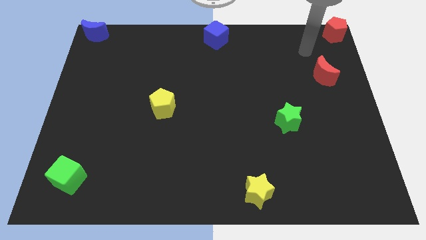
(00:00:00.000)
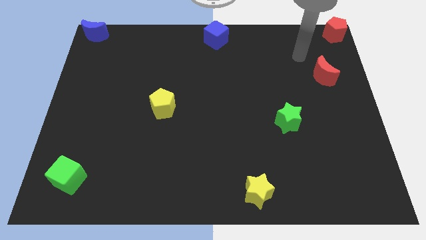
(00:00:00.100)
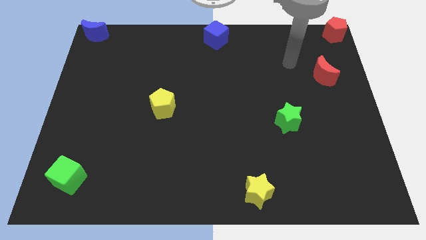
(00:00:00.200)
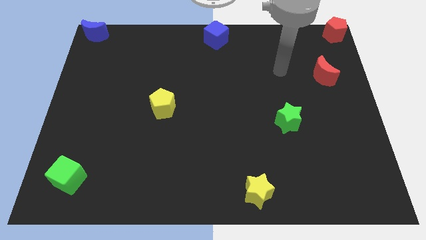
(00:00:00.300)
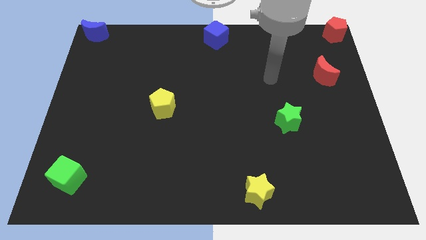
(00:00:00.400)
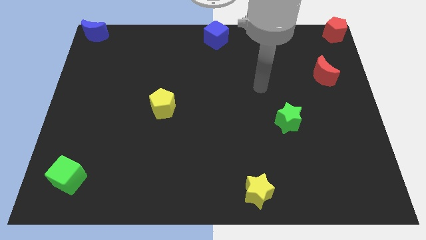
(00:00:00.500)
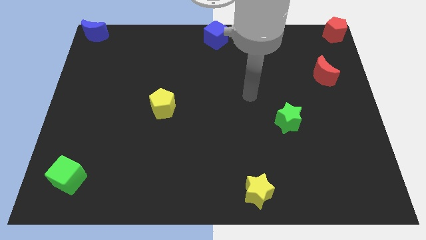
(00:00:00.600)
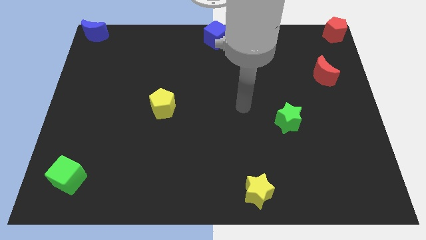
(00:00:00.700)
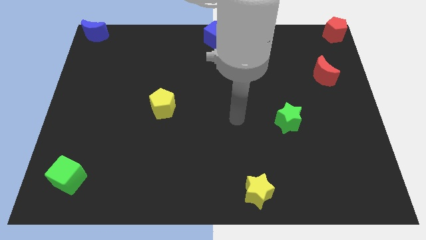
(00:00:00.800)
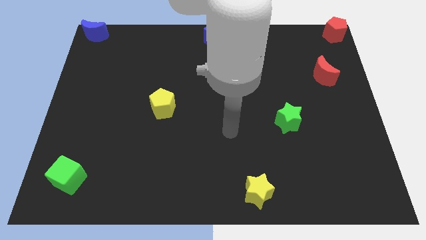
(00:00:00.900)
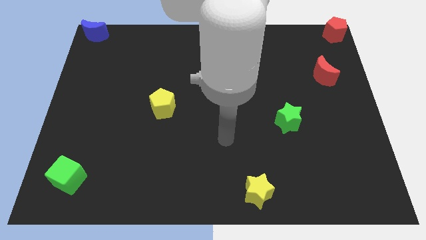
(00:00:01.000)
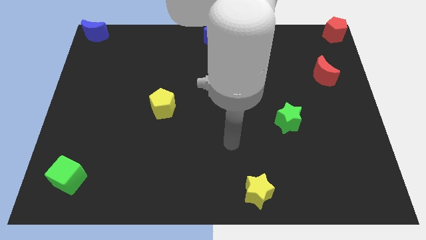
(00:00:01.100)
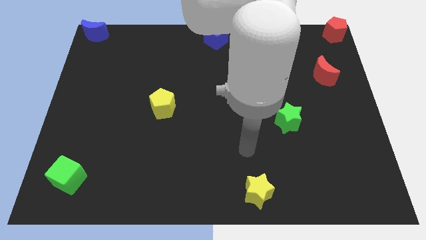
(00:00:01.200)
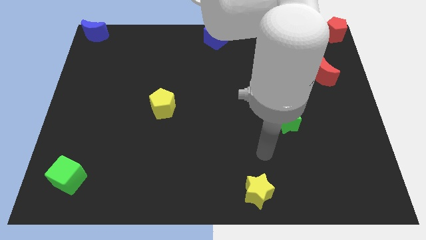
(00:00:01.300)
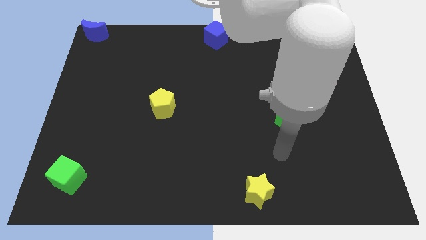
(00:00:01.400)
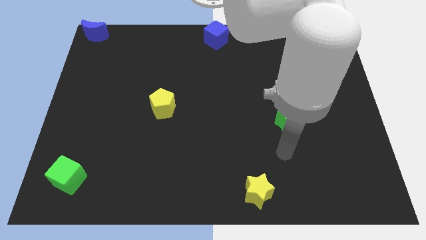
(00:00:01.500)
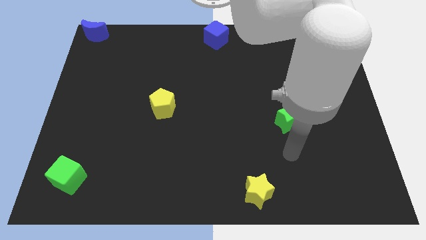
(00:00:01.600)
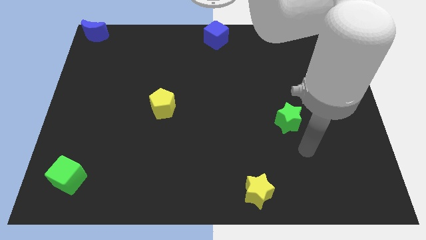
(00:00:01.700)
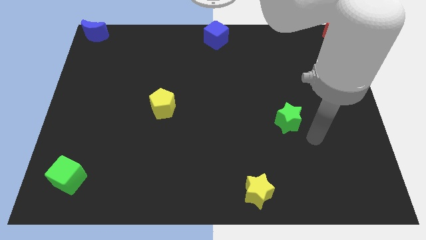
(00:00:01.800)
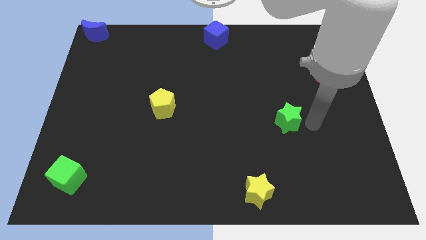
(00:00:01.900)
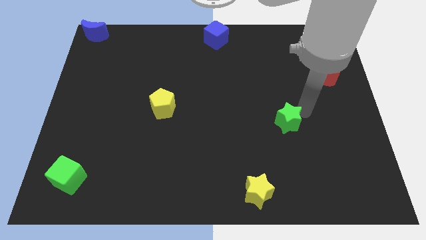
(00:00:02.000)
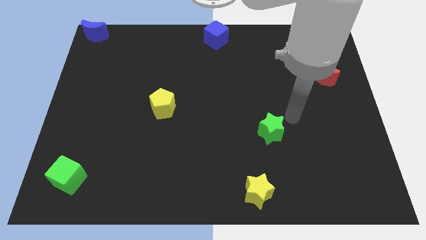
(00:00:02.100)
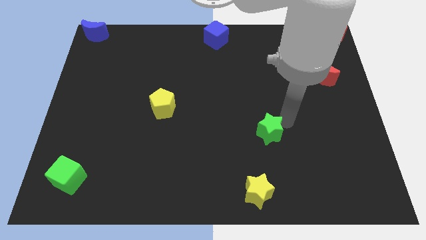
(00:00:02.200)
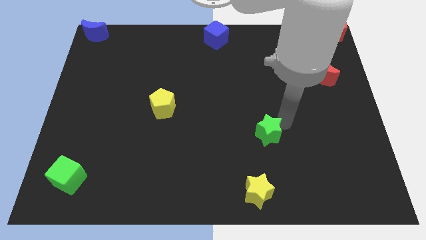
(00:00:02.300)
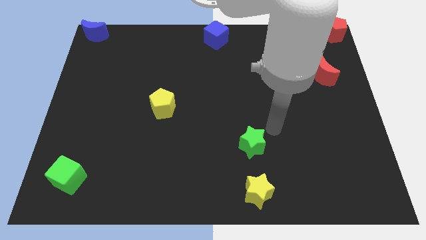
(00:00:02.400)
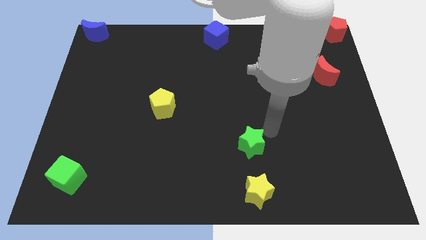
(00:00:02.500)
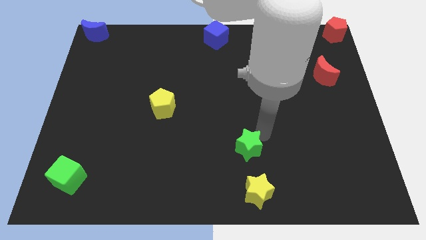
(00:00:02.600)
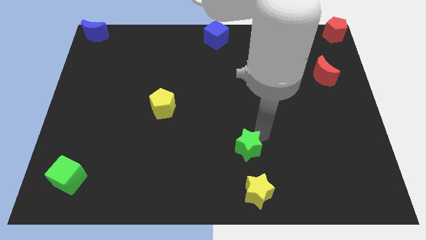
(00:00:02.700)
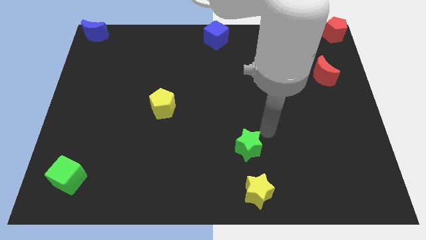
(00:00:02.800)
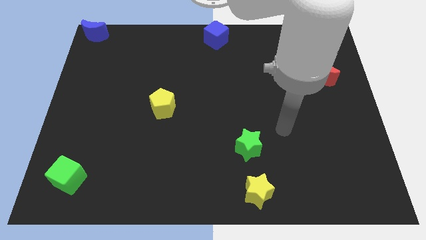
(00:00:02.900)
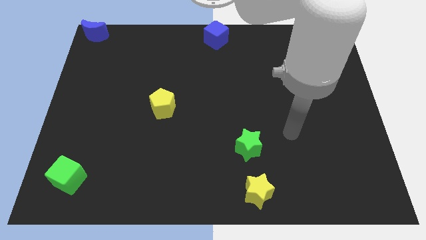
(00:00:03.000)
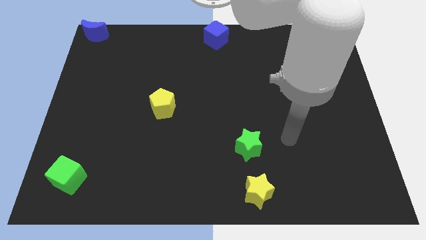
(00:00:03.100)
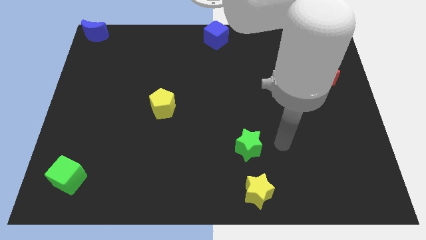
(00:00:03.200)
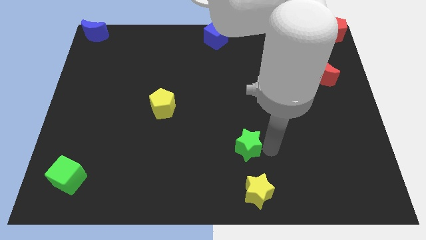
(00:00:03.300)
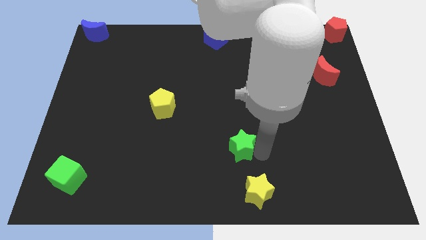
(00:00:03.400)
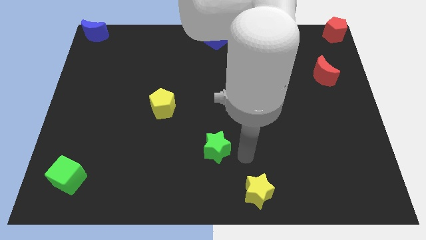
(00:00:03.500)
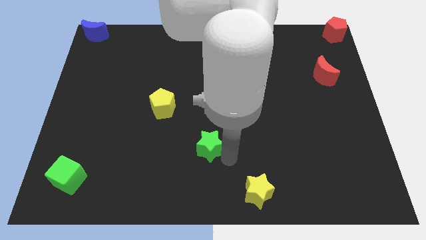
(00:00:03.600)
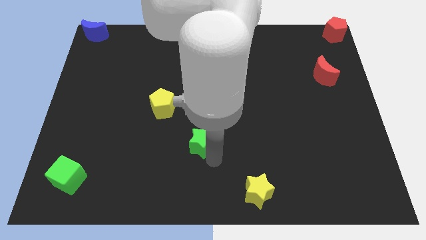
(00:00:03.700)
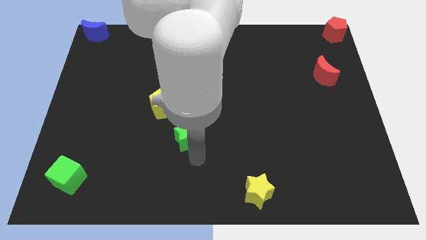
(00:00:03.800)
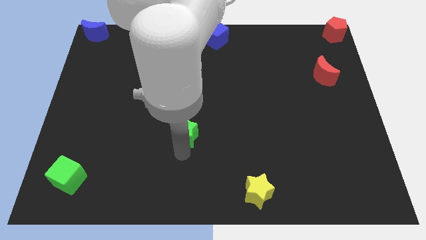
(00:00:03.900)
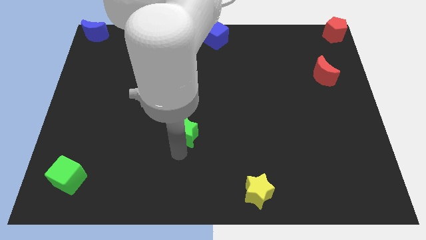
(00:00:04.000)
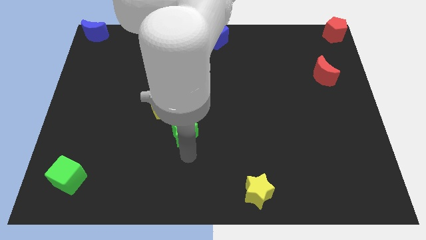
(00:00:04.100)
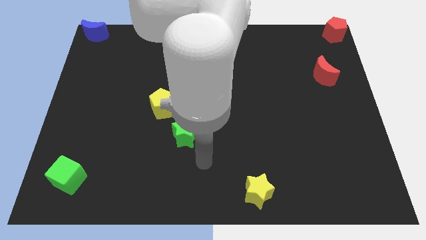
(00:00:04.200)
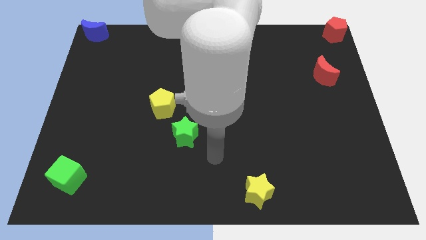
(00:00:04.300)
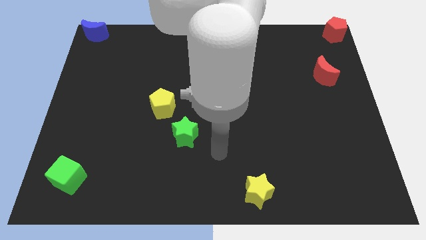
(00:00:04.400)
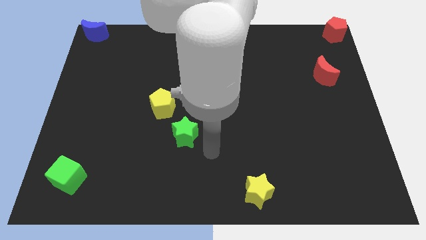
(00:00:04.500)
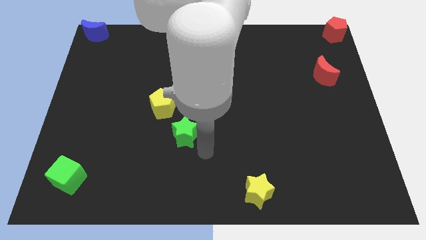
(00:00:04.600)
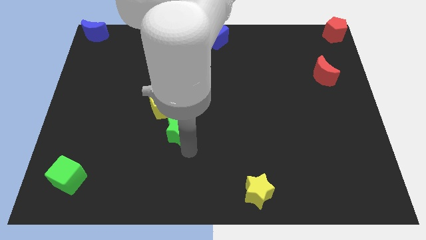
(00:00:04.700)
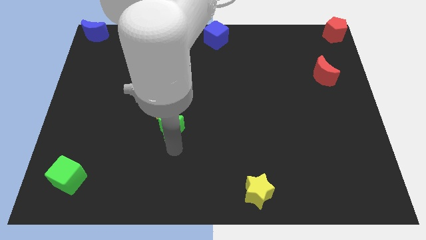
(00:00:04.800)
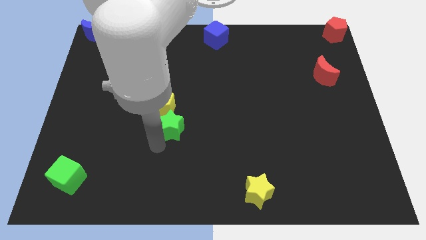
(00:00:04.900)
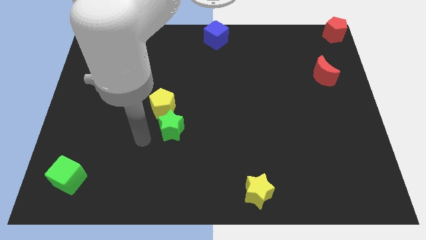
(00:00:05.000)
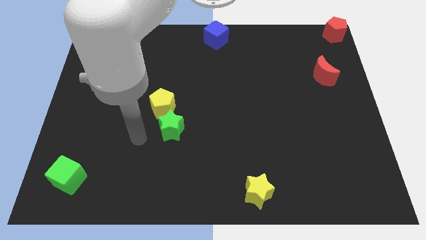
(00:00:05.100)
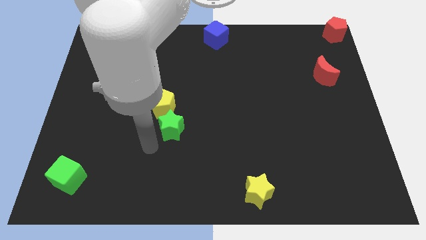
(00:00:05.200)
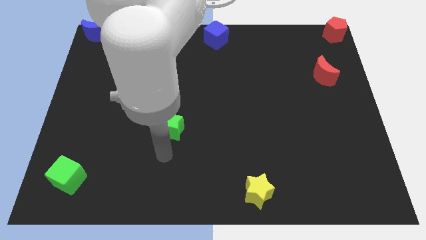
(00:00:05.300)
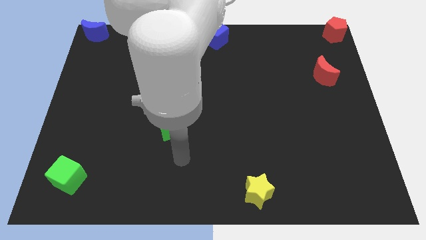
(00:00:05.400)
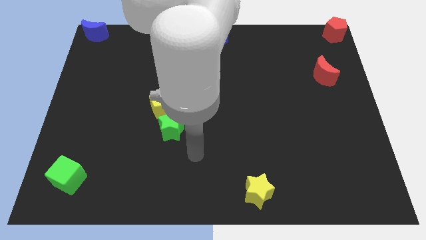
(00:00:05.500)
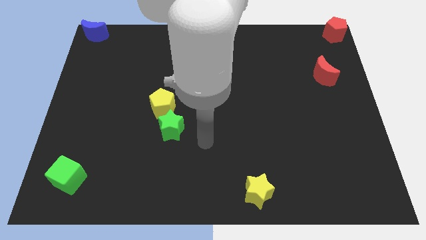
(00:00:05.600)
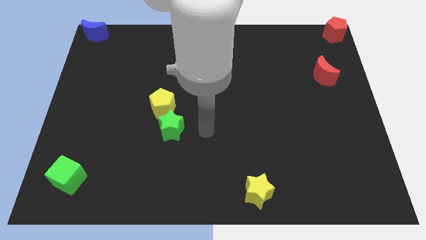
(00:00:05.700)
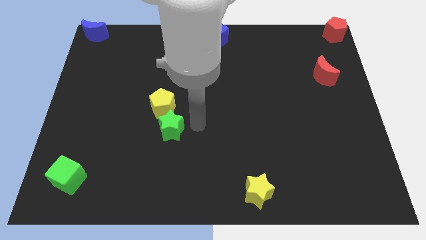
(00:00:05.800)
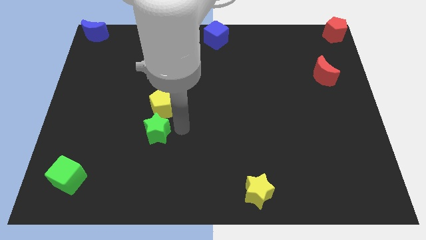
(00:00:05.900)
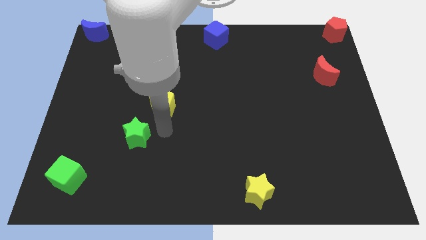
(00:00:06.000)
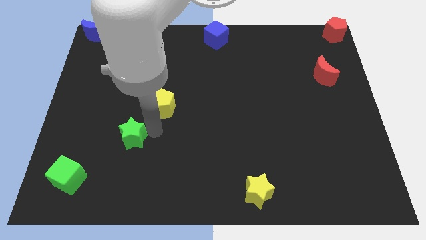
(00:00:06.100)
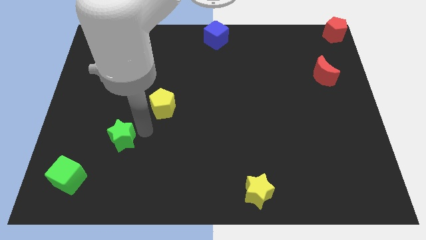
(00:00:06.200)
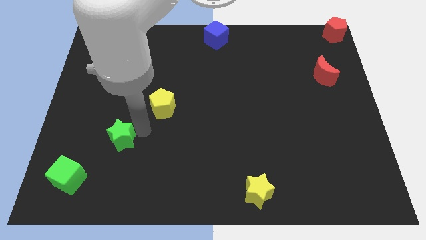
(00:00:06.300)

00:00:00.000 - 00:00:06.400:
place the green star diagonally in between the green cube and the yellow pentagon

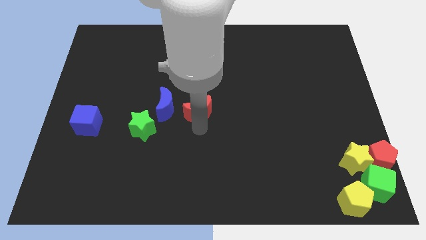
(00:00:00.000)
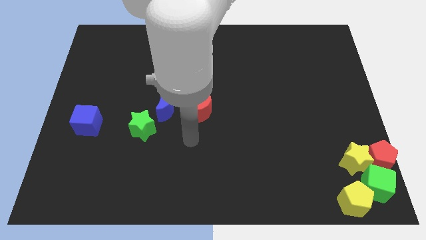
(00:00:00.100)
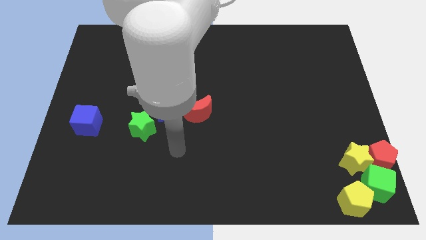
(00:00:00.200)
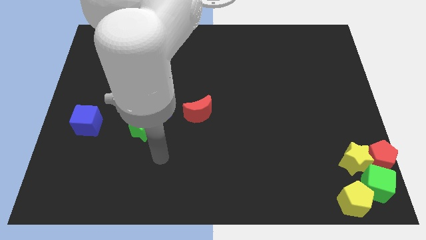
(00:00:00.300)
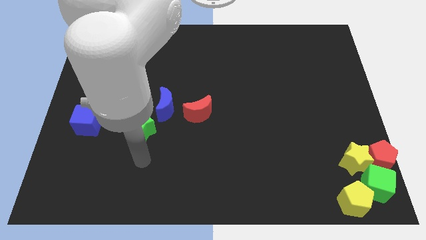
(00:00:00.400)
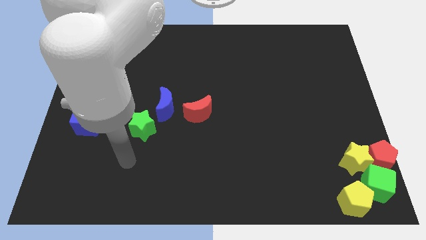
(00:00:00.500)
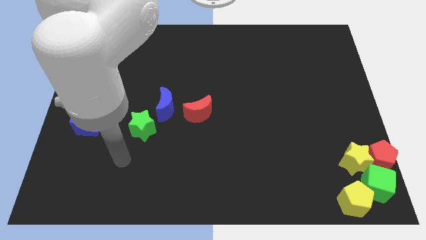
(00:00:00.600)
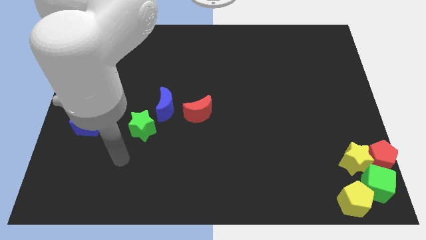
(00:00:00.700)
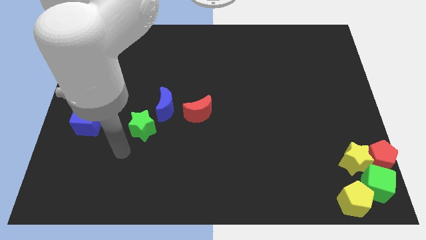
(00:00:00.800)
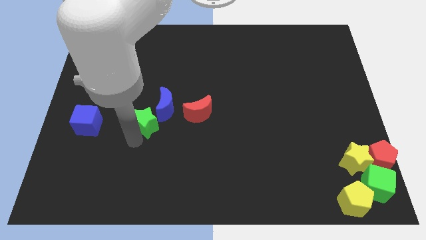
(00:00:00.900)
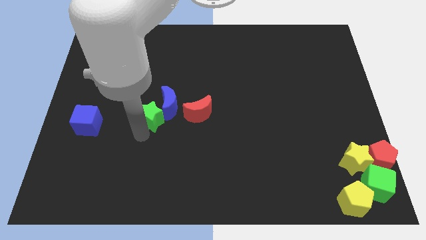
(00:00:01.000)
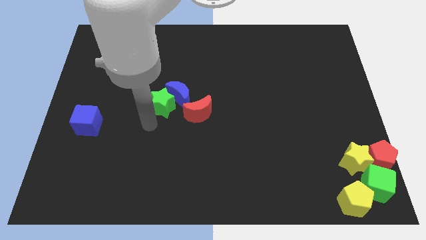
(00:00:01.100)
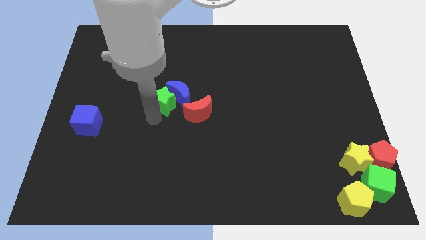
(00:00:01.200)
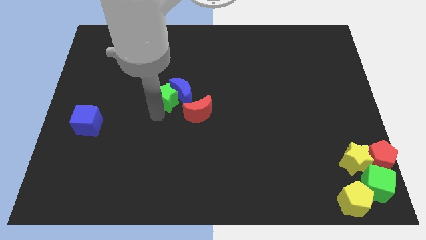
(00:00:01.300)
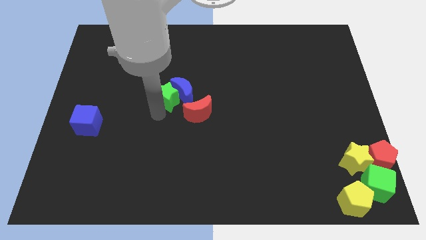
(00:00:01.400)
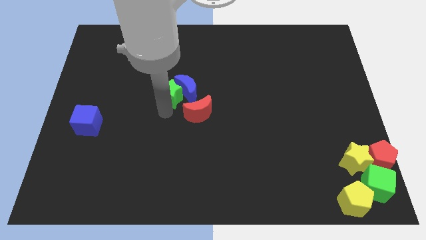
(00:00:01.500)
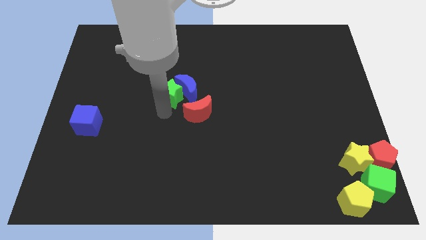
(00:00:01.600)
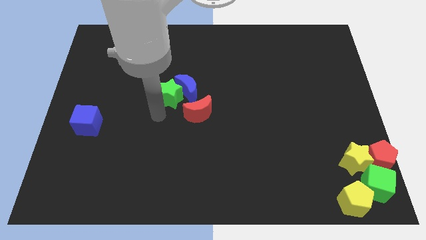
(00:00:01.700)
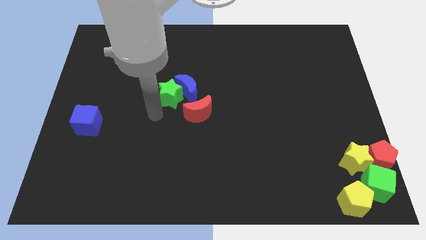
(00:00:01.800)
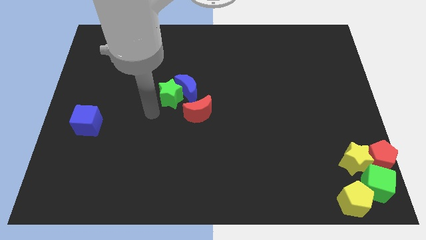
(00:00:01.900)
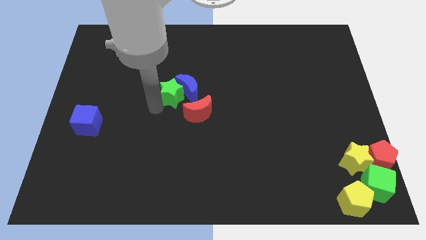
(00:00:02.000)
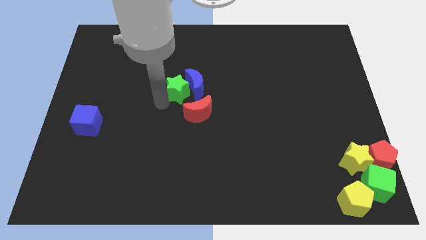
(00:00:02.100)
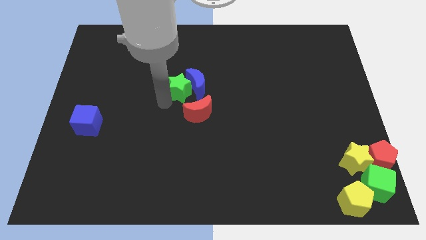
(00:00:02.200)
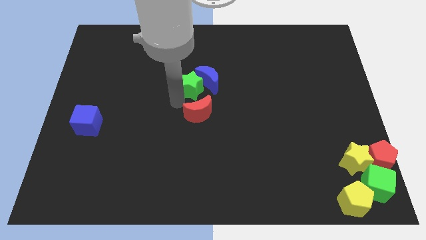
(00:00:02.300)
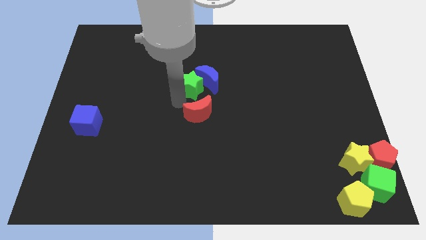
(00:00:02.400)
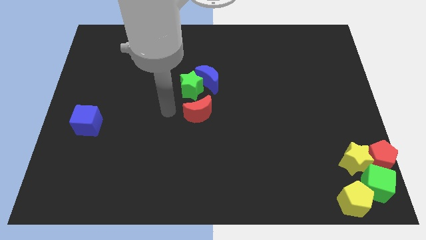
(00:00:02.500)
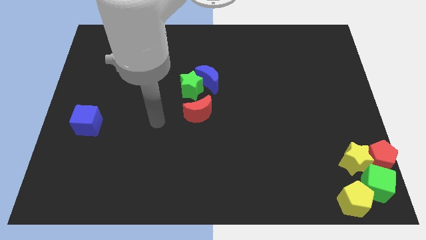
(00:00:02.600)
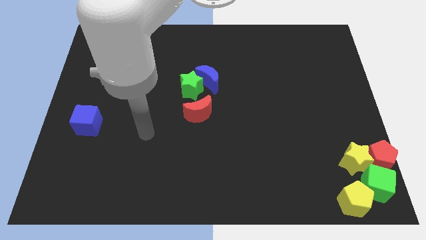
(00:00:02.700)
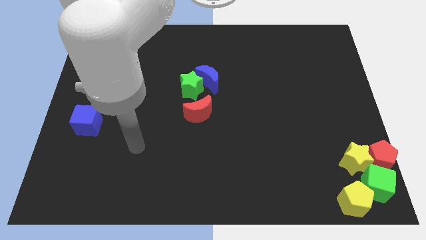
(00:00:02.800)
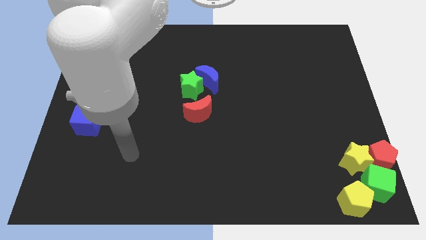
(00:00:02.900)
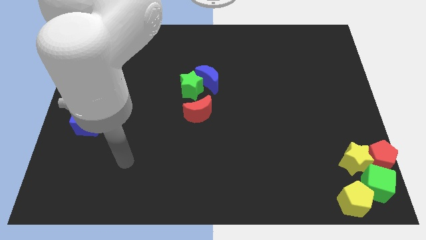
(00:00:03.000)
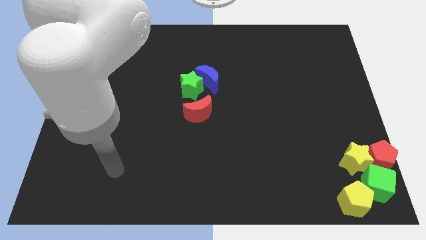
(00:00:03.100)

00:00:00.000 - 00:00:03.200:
move the green star along with the blue crescent to the top side of the red crescent
